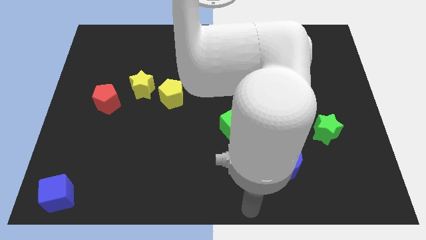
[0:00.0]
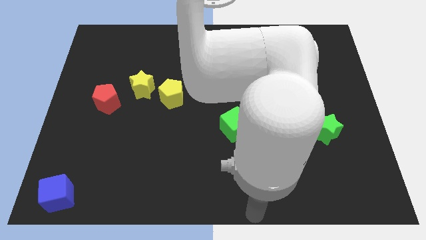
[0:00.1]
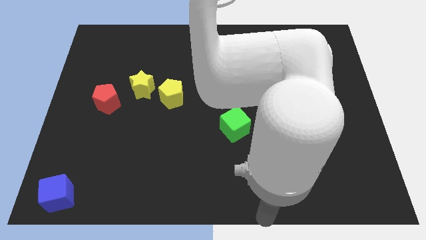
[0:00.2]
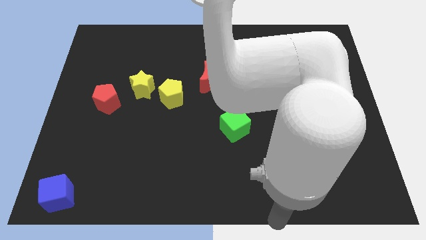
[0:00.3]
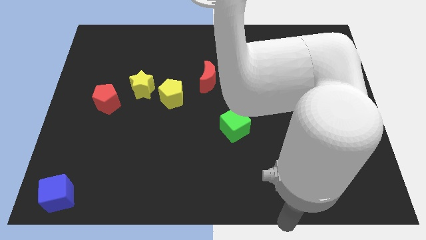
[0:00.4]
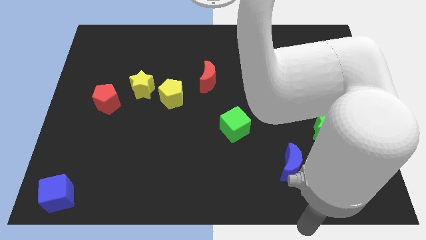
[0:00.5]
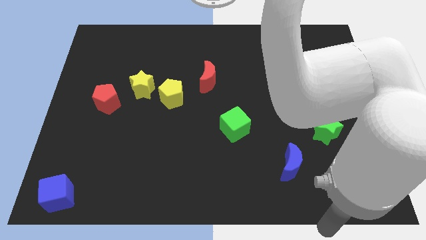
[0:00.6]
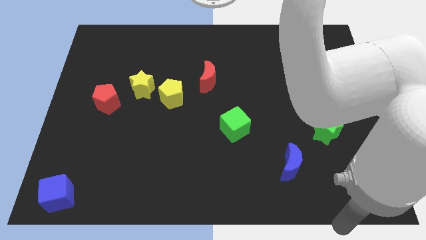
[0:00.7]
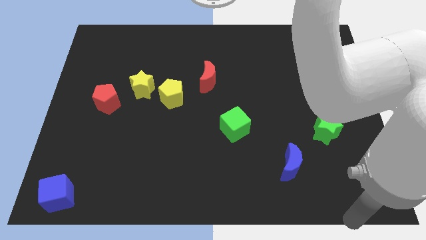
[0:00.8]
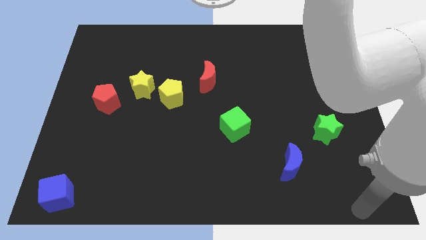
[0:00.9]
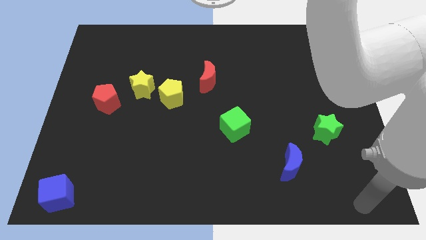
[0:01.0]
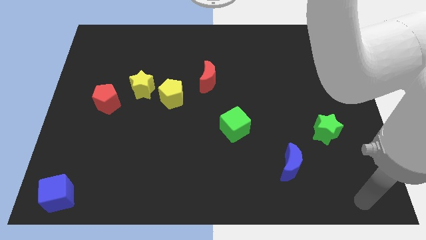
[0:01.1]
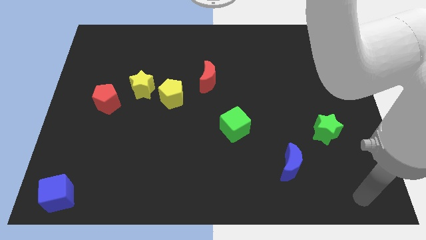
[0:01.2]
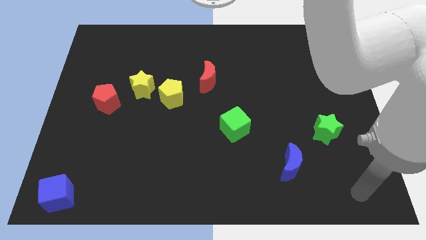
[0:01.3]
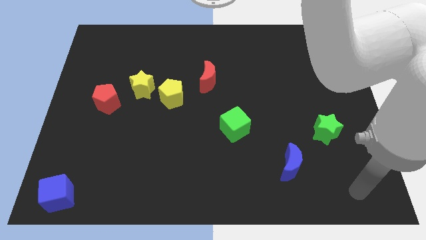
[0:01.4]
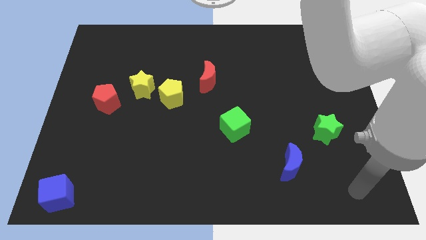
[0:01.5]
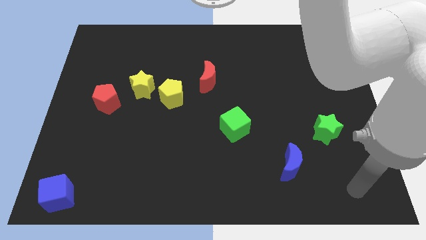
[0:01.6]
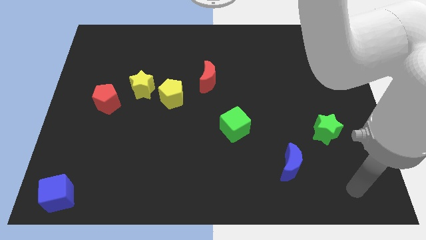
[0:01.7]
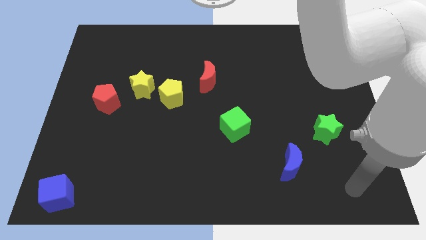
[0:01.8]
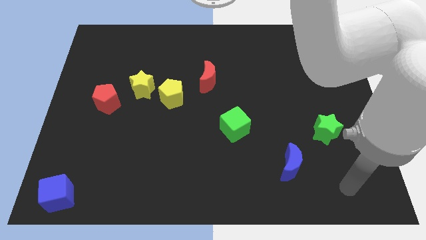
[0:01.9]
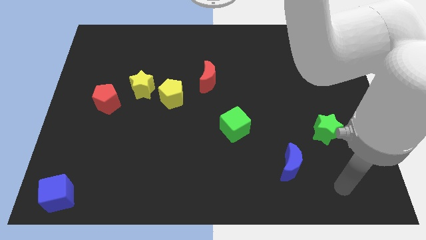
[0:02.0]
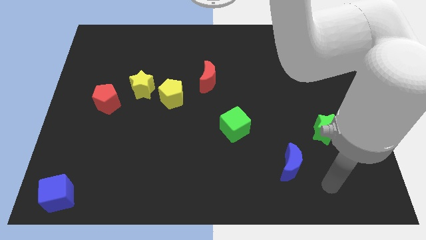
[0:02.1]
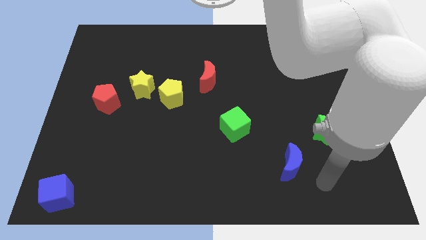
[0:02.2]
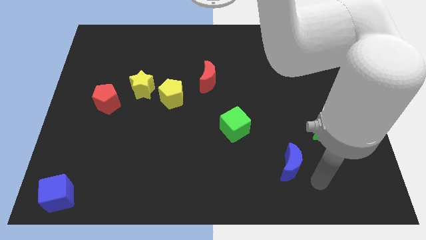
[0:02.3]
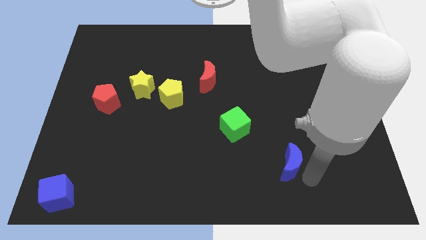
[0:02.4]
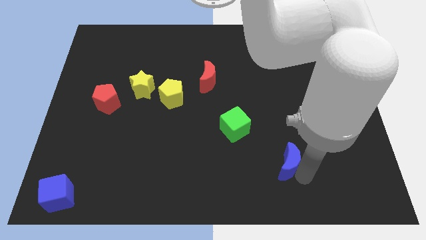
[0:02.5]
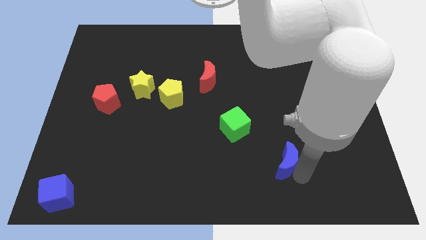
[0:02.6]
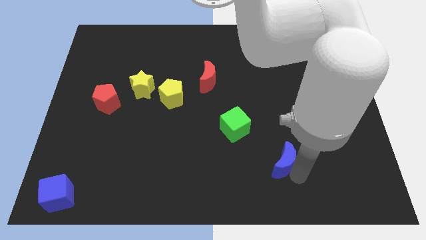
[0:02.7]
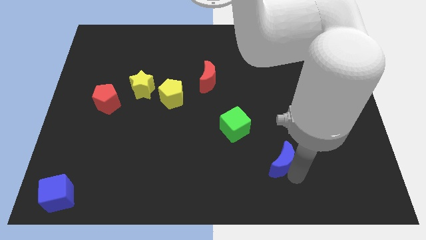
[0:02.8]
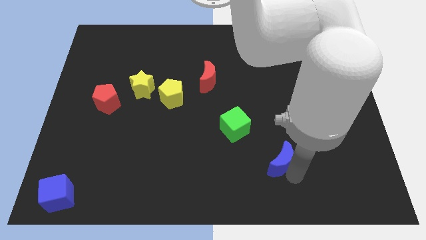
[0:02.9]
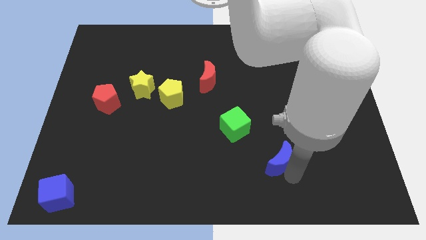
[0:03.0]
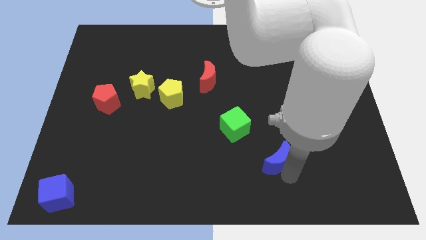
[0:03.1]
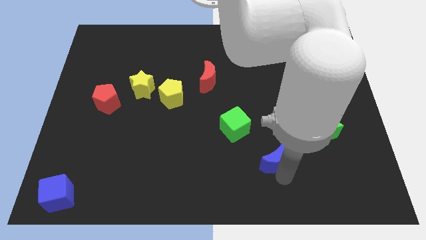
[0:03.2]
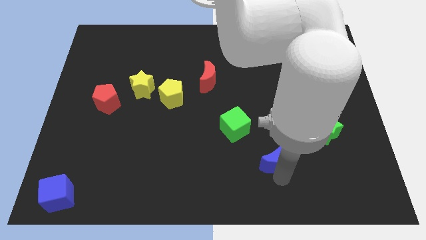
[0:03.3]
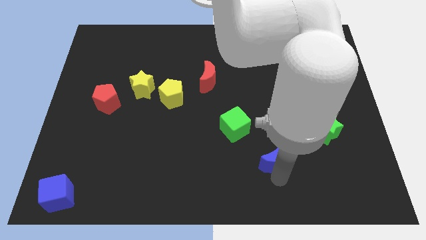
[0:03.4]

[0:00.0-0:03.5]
move the blue crescent towards right side of the green cube

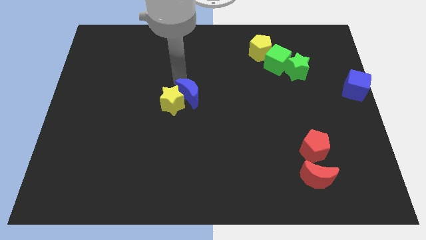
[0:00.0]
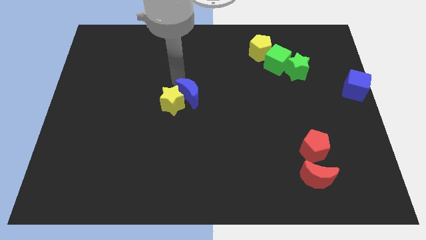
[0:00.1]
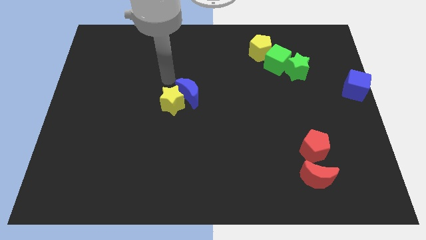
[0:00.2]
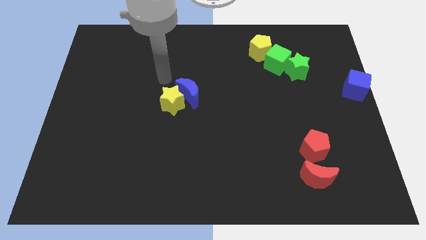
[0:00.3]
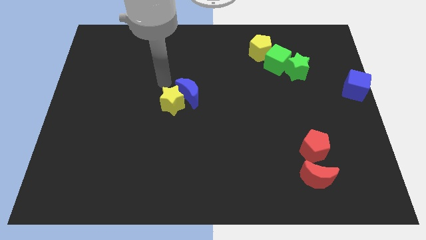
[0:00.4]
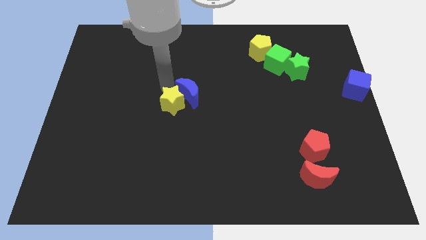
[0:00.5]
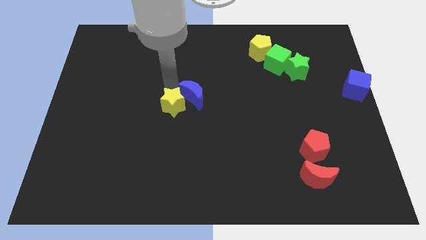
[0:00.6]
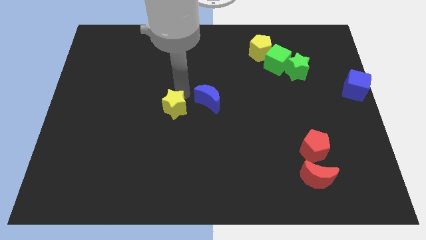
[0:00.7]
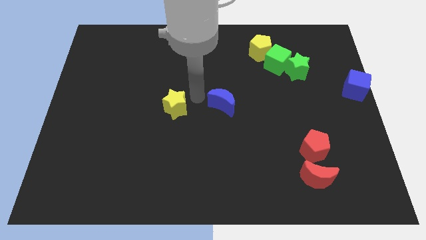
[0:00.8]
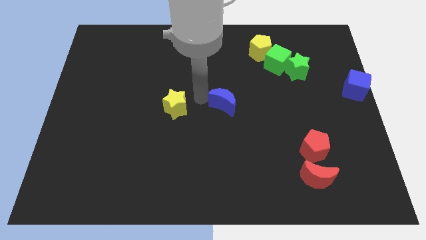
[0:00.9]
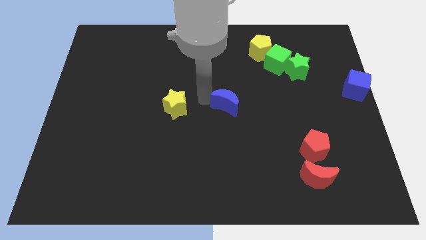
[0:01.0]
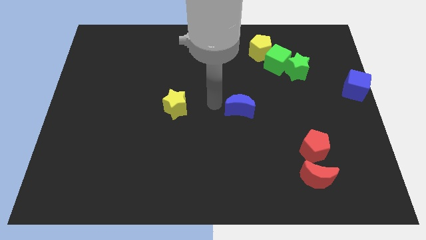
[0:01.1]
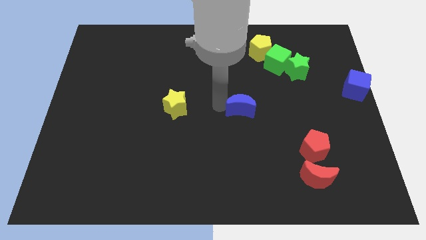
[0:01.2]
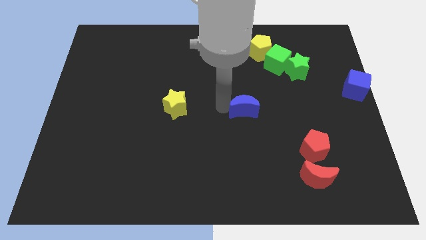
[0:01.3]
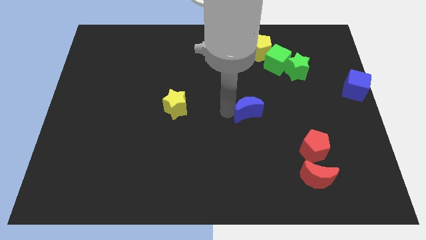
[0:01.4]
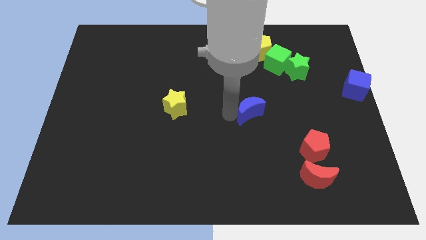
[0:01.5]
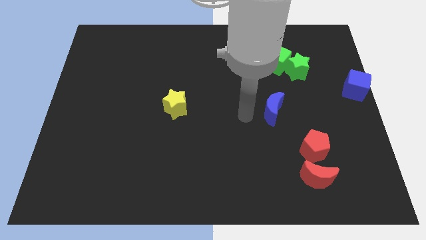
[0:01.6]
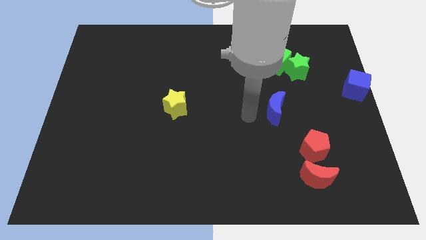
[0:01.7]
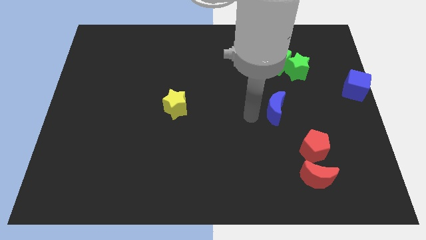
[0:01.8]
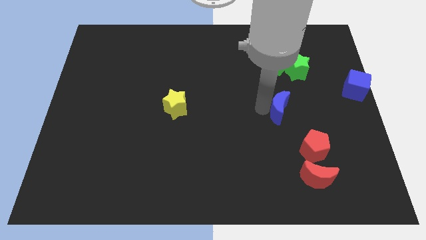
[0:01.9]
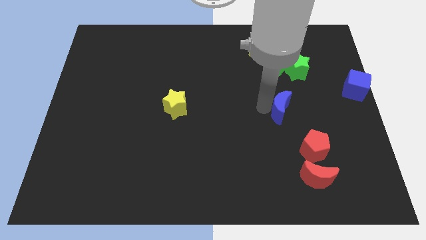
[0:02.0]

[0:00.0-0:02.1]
move the blue moon away from the yellow star

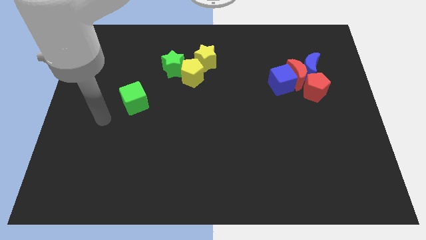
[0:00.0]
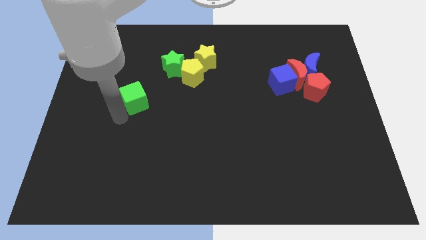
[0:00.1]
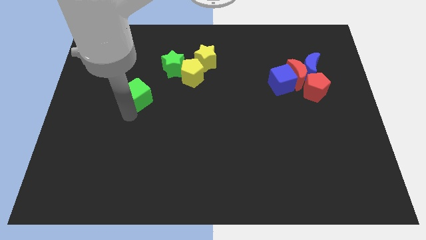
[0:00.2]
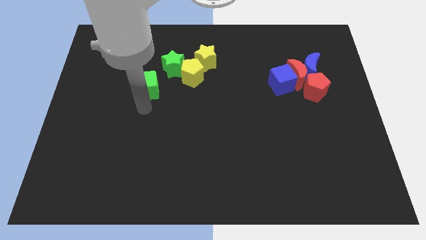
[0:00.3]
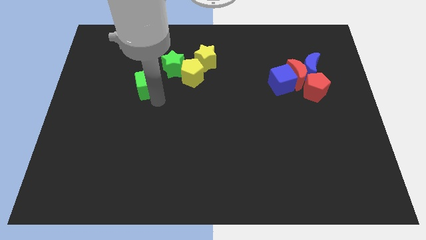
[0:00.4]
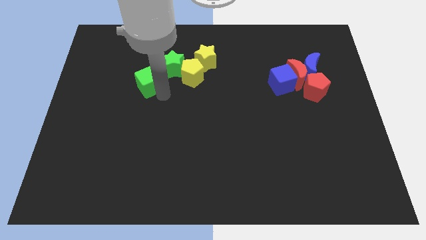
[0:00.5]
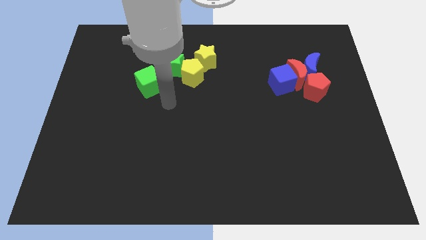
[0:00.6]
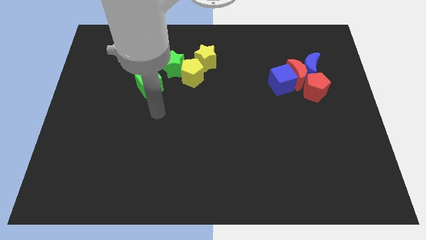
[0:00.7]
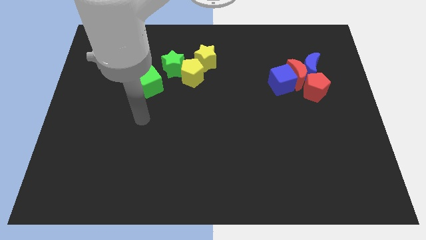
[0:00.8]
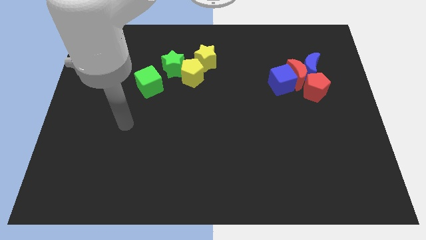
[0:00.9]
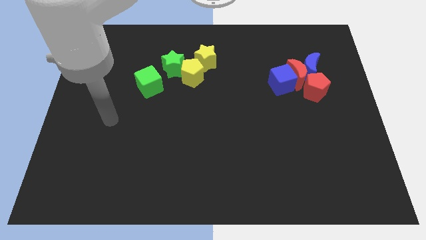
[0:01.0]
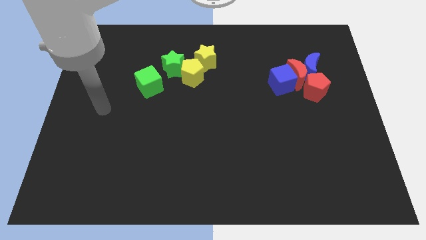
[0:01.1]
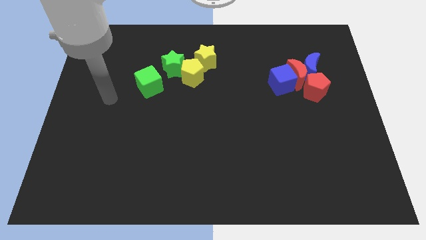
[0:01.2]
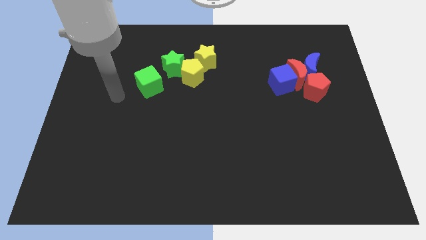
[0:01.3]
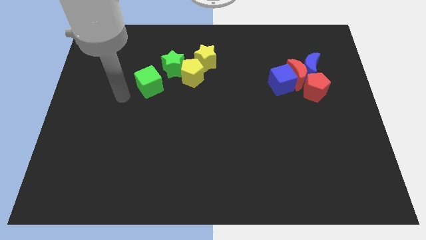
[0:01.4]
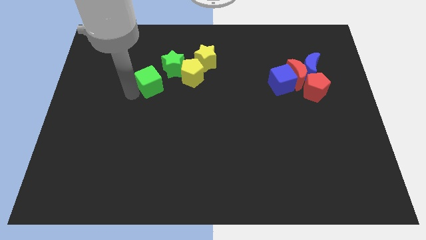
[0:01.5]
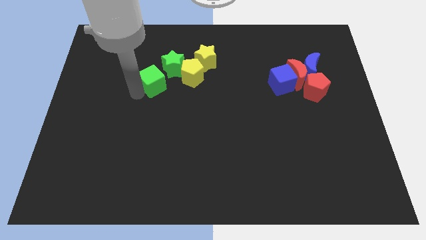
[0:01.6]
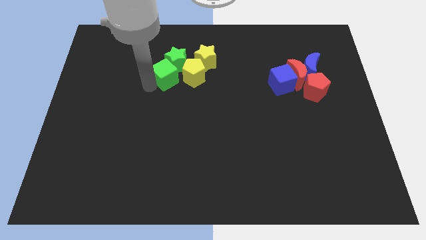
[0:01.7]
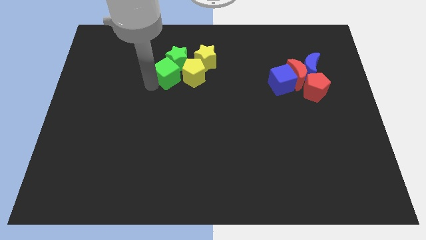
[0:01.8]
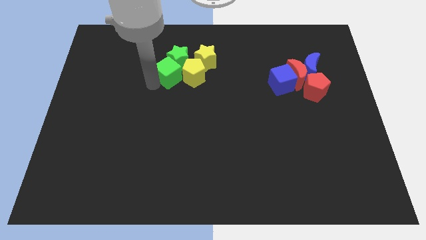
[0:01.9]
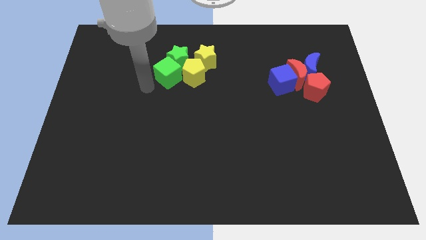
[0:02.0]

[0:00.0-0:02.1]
push the green cube into the green star with yellow blocks

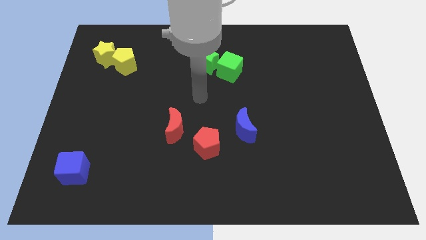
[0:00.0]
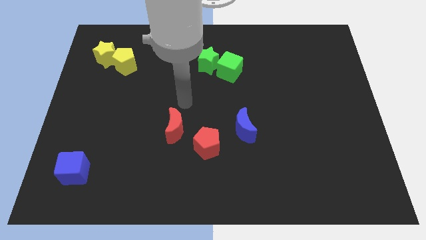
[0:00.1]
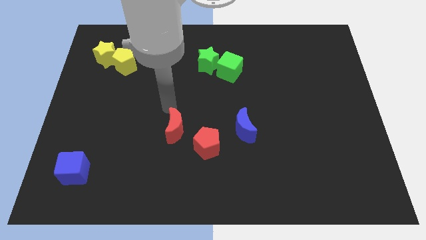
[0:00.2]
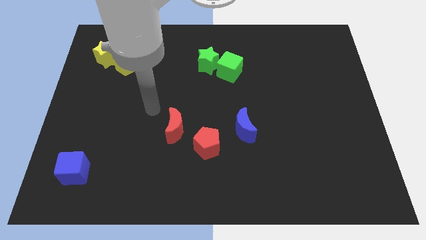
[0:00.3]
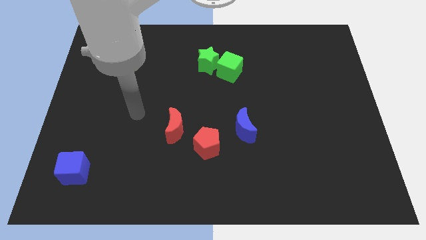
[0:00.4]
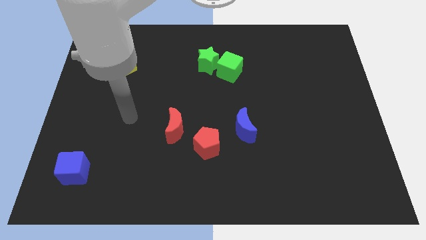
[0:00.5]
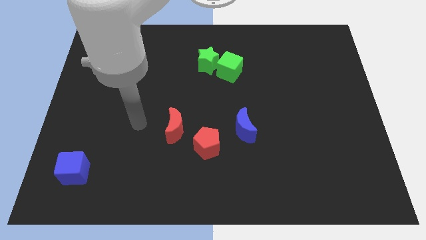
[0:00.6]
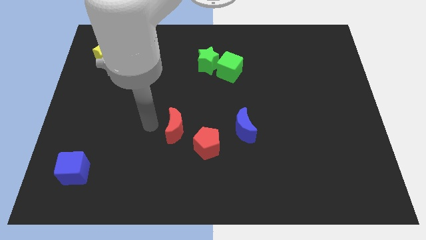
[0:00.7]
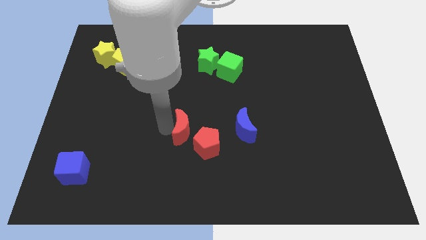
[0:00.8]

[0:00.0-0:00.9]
place the arm left to the red moon

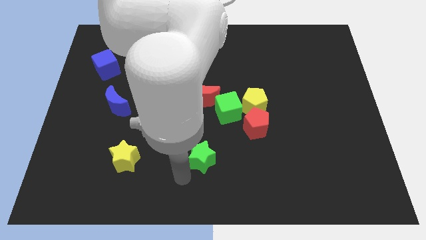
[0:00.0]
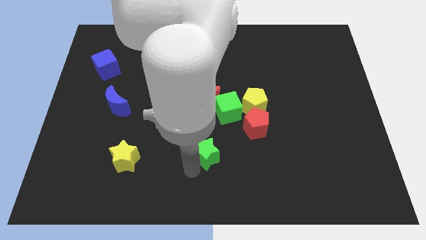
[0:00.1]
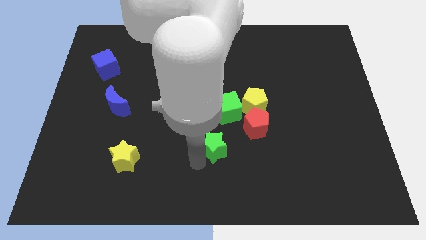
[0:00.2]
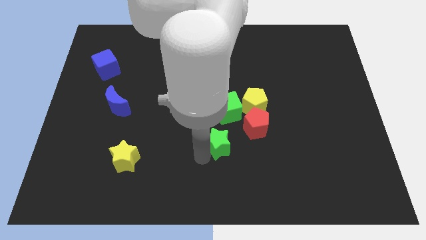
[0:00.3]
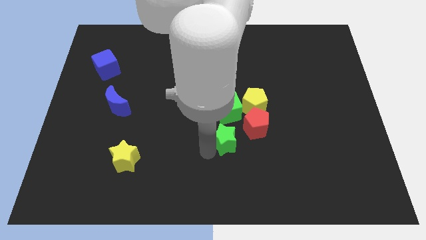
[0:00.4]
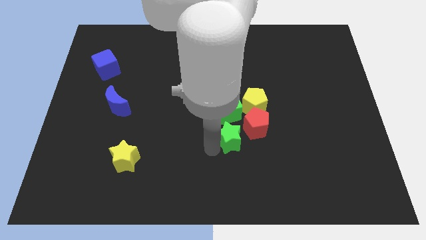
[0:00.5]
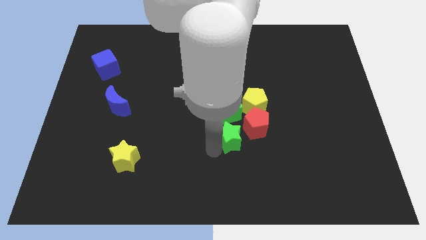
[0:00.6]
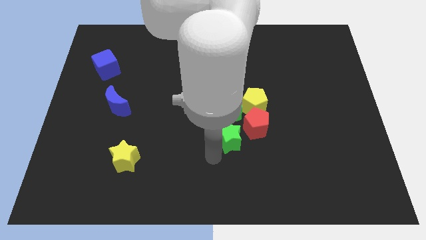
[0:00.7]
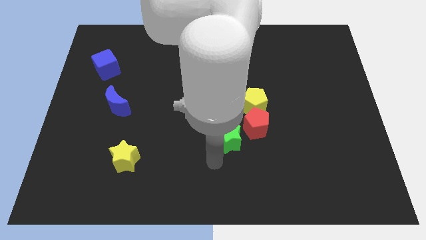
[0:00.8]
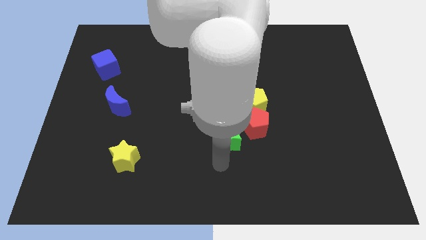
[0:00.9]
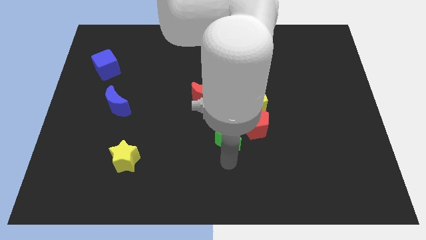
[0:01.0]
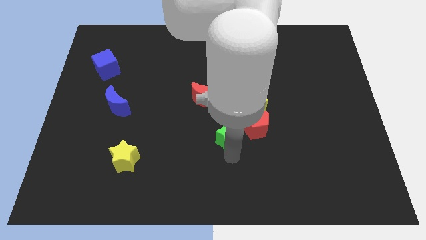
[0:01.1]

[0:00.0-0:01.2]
move the green star left to the red pentagon
